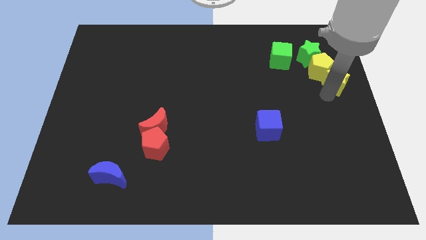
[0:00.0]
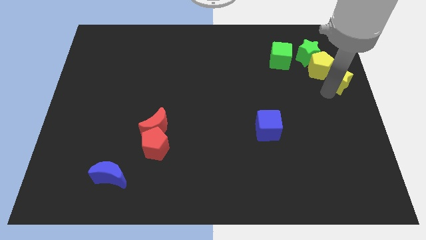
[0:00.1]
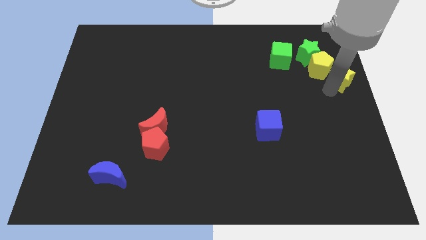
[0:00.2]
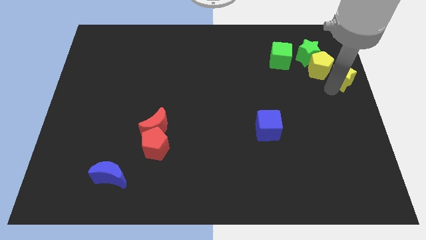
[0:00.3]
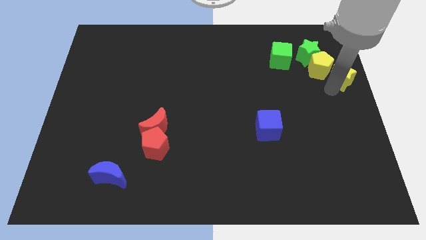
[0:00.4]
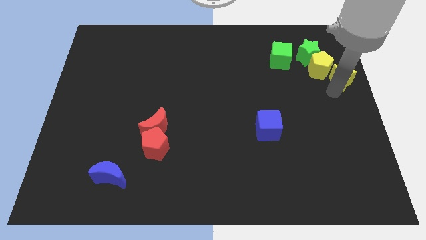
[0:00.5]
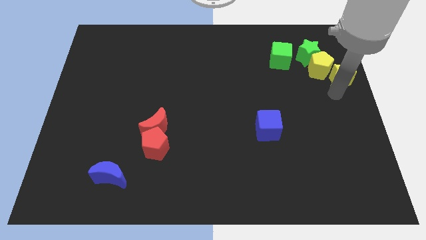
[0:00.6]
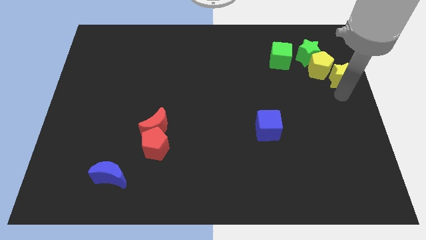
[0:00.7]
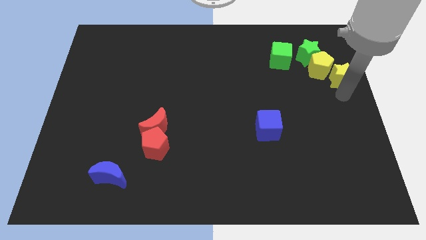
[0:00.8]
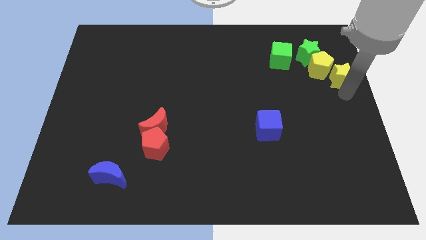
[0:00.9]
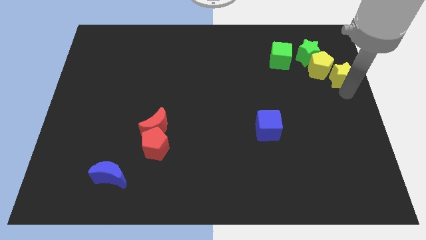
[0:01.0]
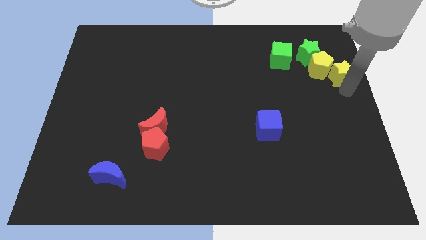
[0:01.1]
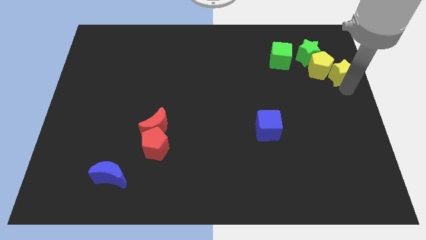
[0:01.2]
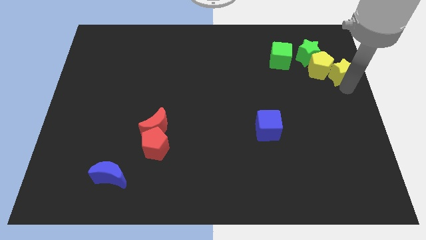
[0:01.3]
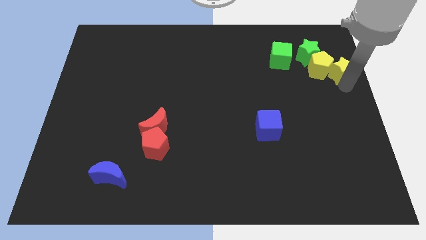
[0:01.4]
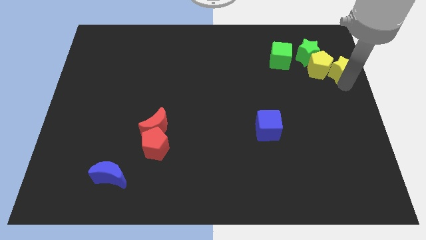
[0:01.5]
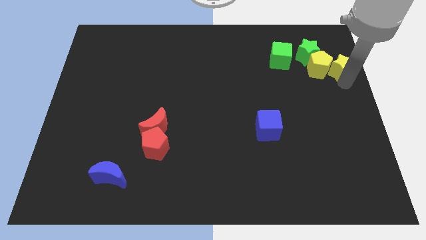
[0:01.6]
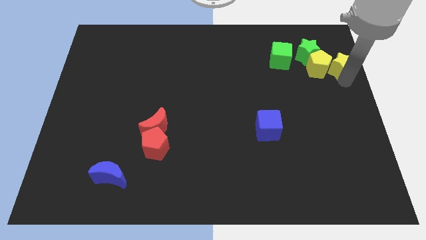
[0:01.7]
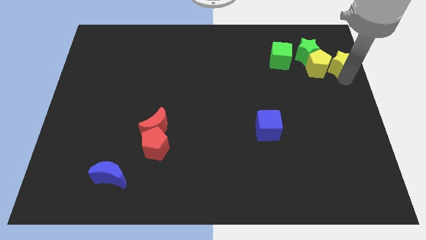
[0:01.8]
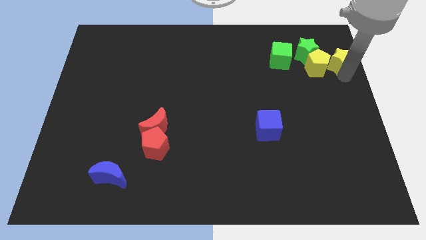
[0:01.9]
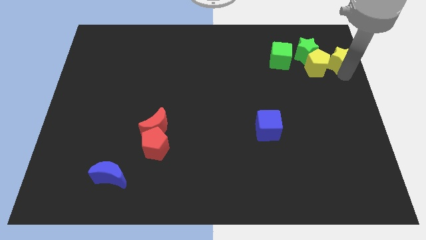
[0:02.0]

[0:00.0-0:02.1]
place yellow star to the right of yellow pentagon

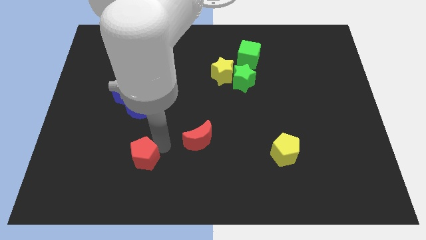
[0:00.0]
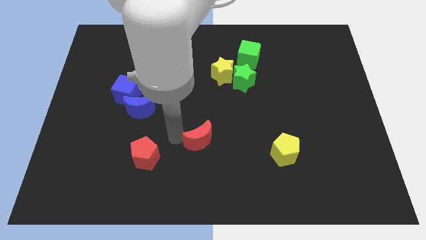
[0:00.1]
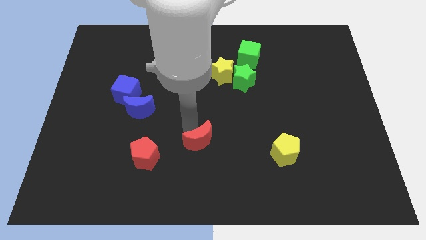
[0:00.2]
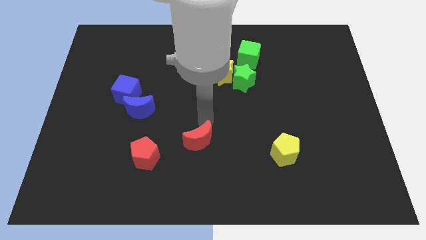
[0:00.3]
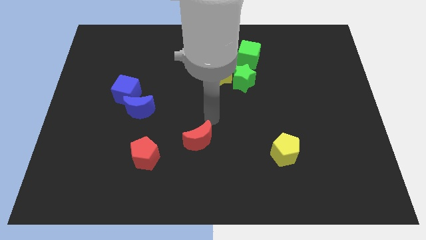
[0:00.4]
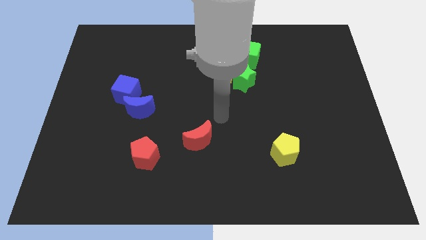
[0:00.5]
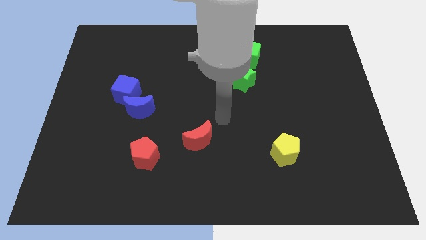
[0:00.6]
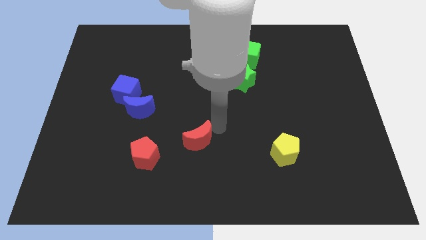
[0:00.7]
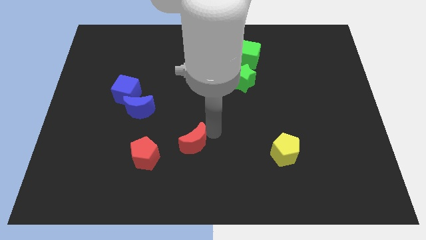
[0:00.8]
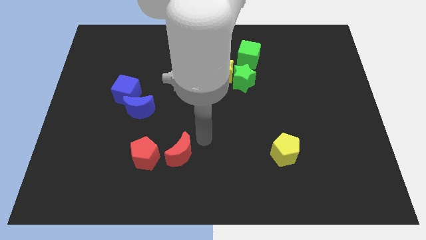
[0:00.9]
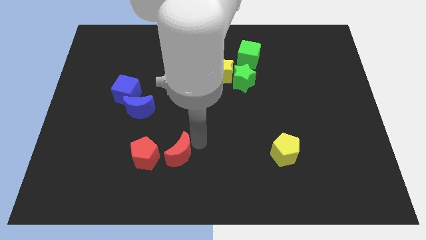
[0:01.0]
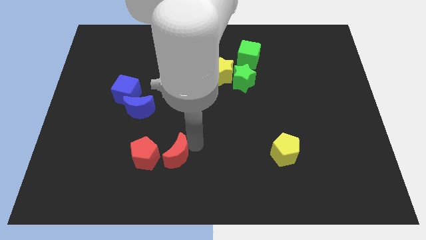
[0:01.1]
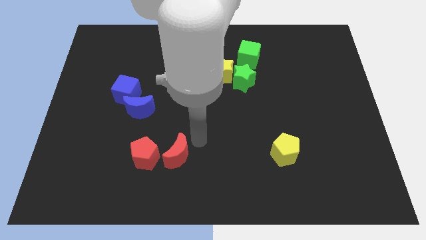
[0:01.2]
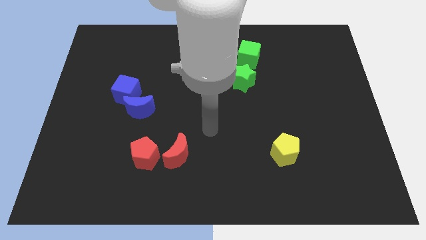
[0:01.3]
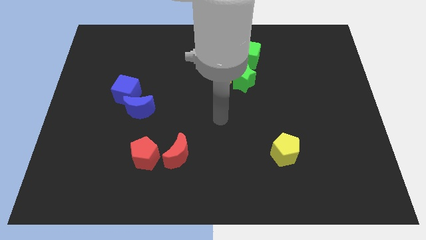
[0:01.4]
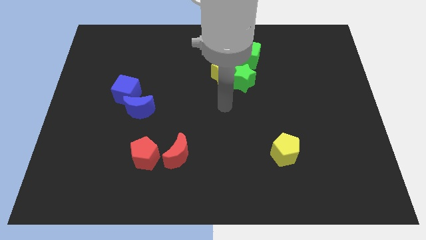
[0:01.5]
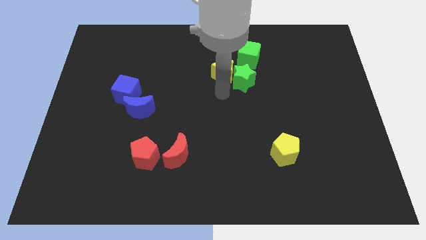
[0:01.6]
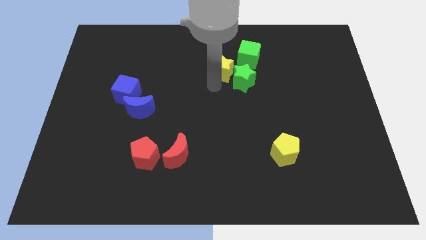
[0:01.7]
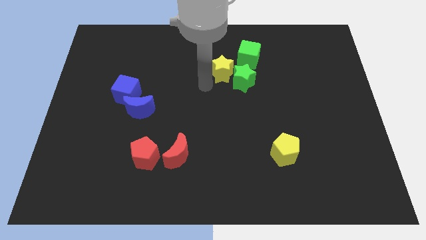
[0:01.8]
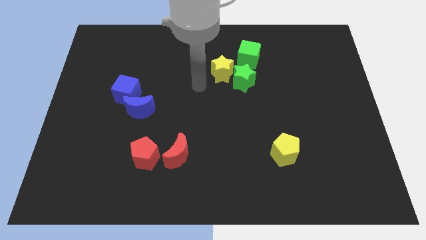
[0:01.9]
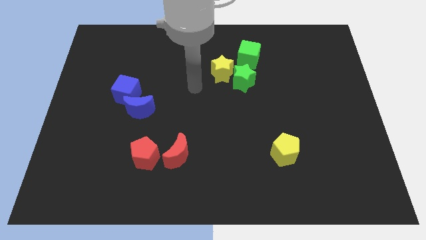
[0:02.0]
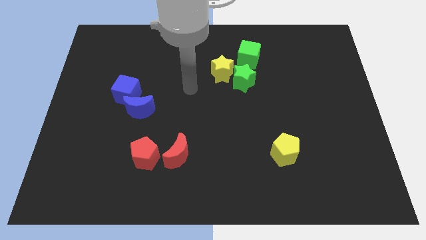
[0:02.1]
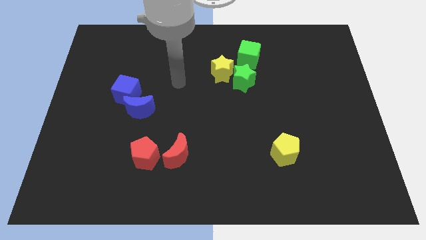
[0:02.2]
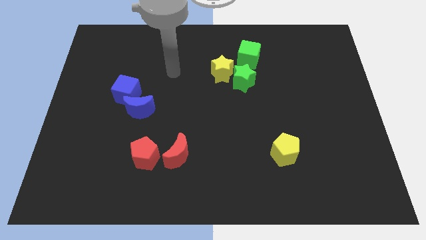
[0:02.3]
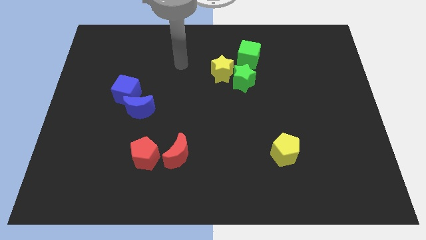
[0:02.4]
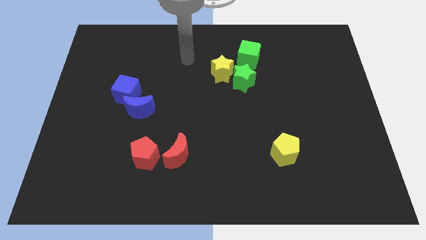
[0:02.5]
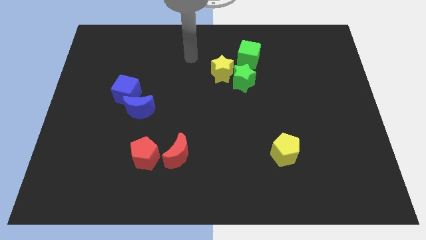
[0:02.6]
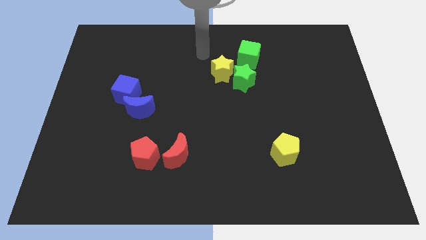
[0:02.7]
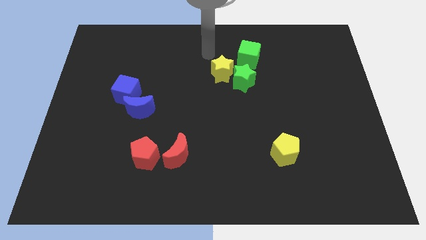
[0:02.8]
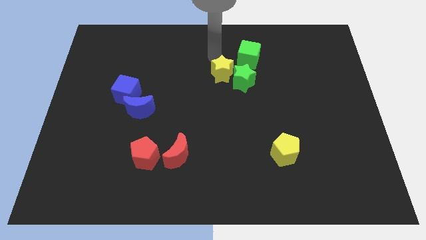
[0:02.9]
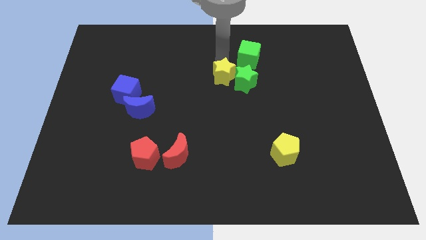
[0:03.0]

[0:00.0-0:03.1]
place the red crescent in between the red and yellow pentagon

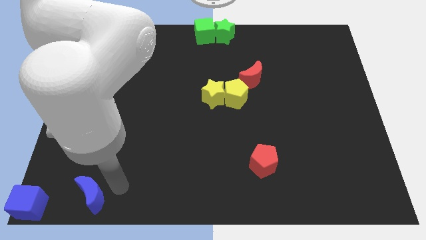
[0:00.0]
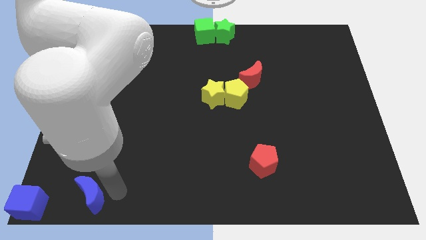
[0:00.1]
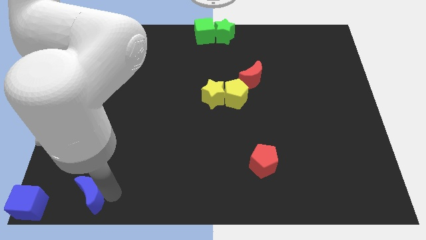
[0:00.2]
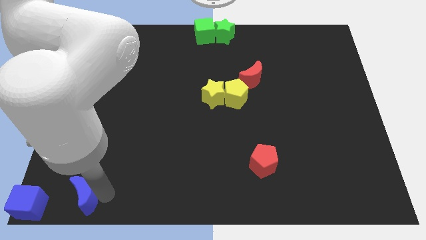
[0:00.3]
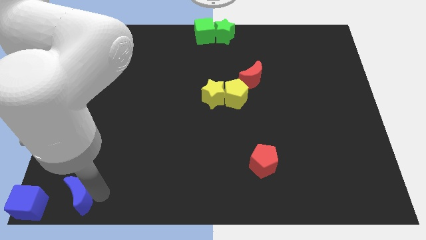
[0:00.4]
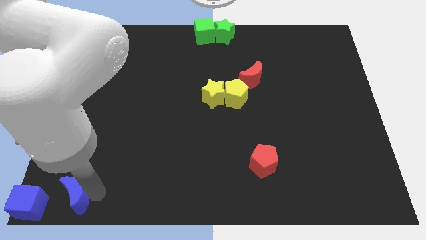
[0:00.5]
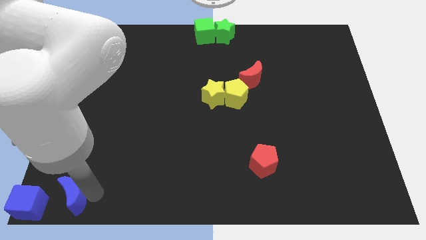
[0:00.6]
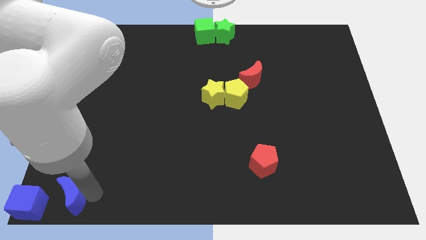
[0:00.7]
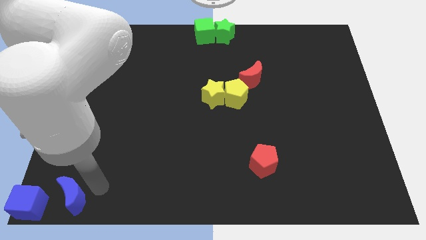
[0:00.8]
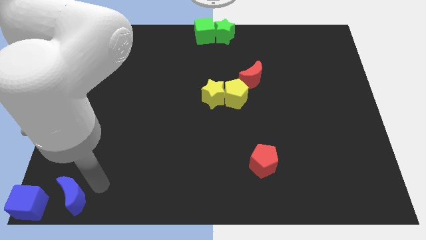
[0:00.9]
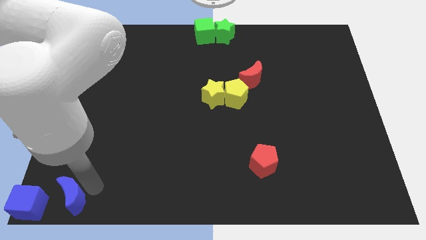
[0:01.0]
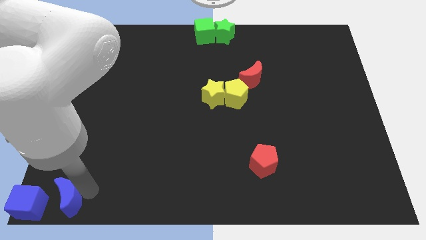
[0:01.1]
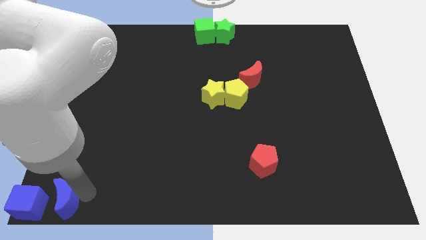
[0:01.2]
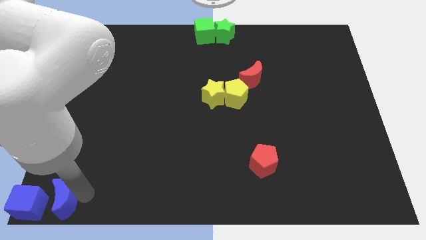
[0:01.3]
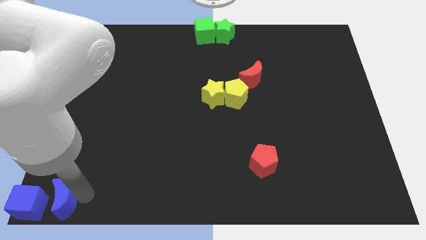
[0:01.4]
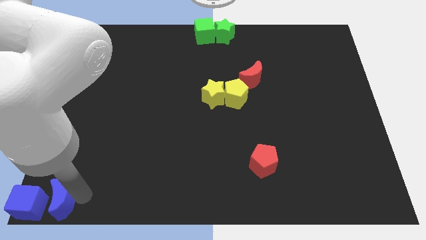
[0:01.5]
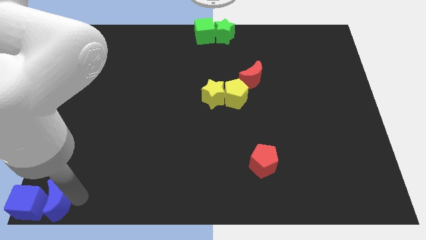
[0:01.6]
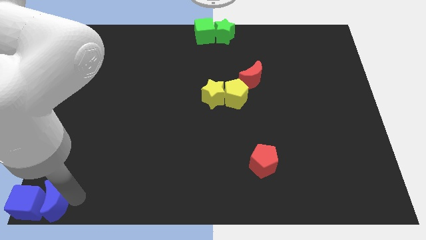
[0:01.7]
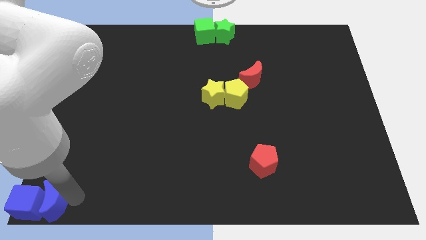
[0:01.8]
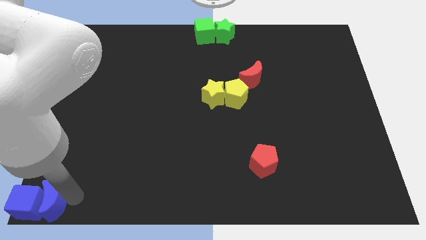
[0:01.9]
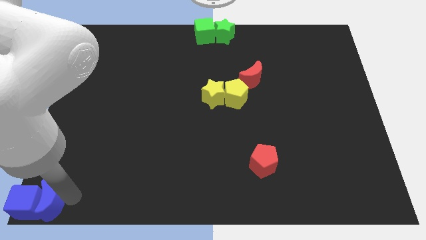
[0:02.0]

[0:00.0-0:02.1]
place blue crescent close to blue block

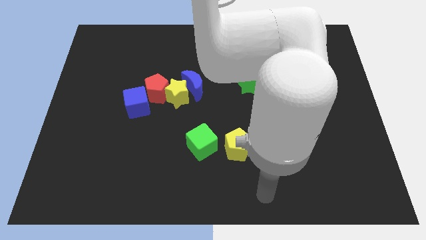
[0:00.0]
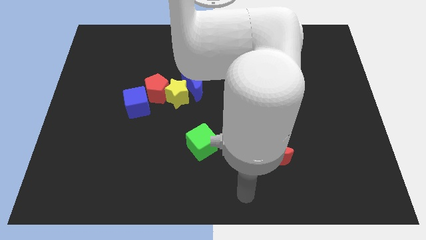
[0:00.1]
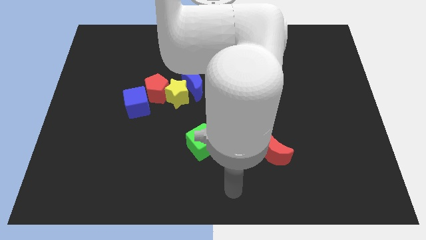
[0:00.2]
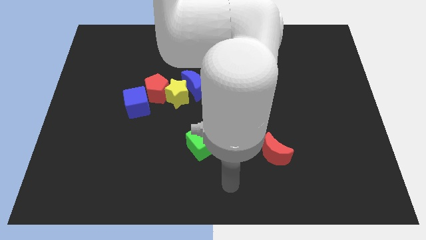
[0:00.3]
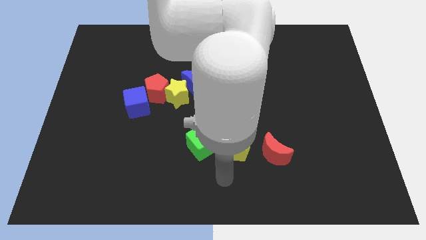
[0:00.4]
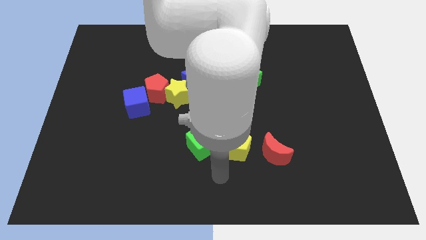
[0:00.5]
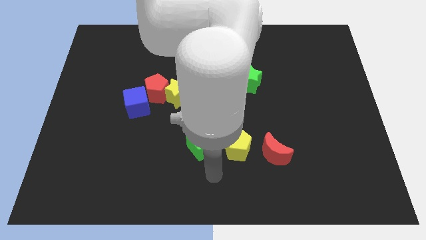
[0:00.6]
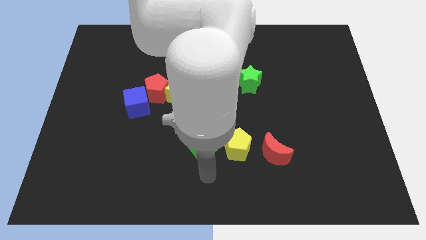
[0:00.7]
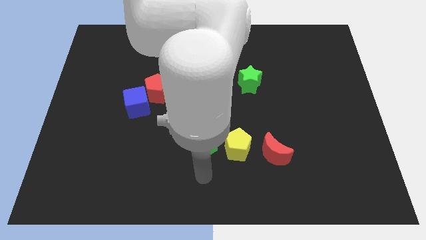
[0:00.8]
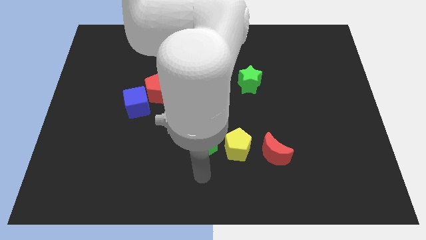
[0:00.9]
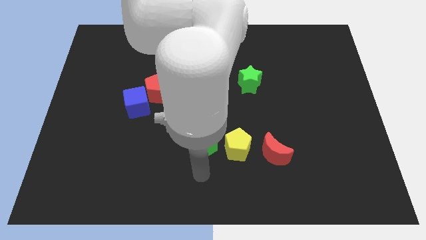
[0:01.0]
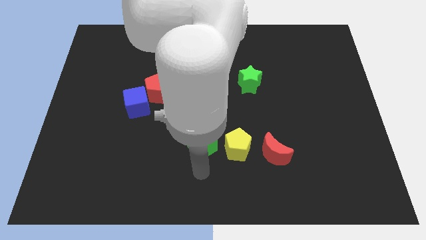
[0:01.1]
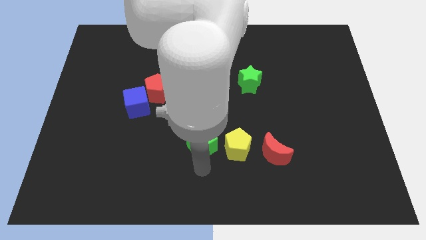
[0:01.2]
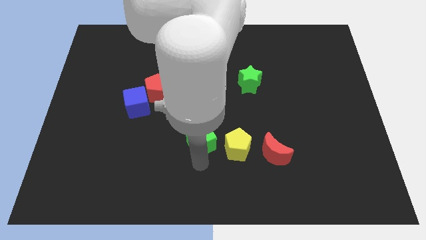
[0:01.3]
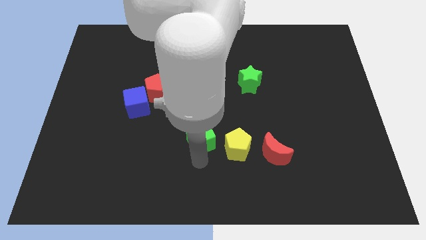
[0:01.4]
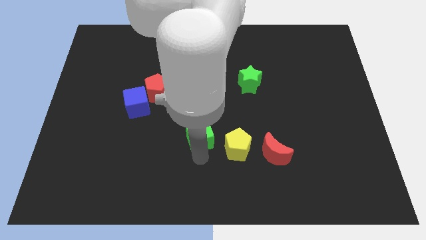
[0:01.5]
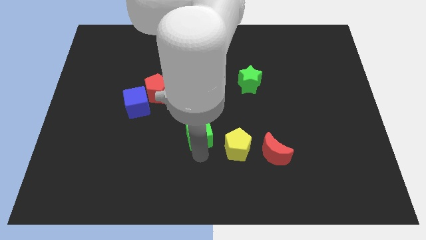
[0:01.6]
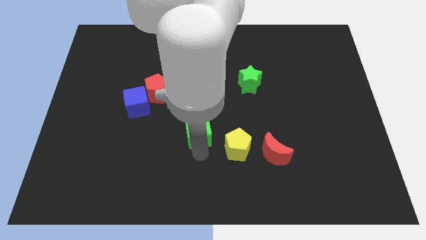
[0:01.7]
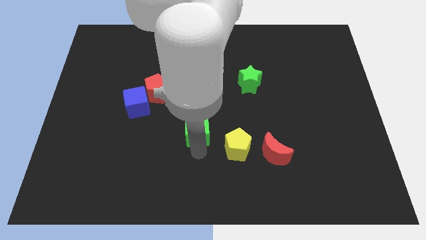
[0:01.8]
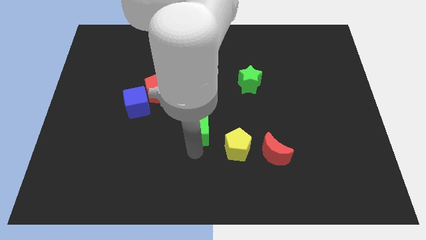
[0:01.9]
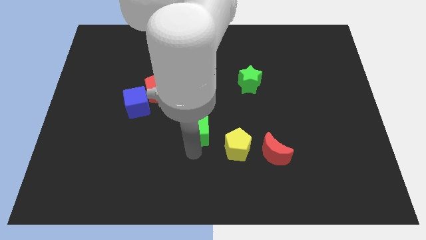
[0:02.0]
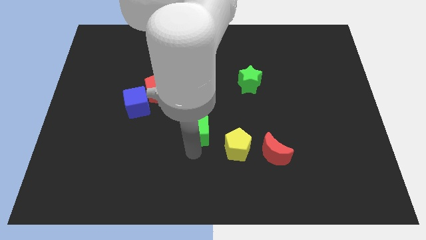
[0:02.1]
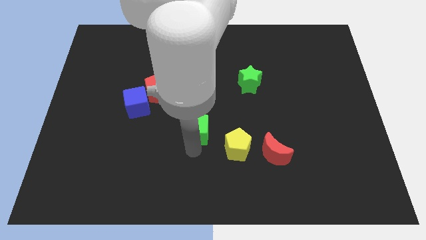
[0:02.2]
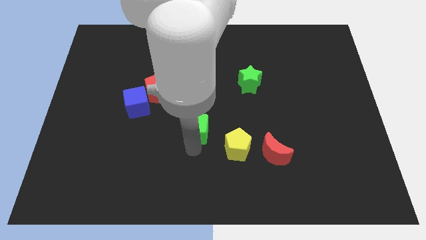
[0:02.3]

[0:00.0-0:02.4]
move the green cube below the blue crescent
